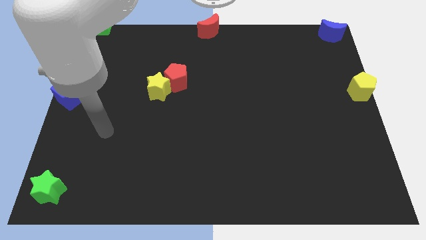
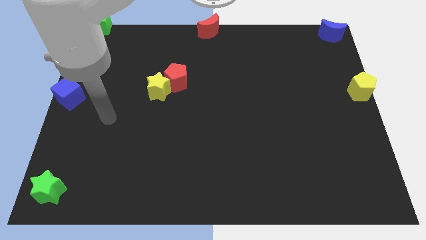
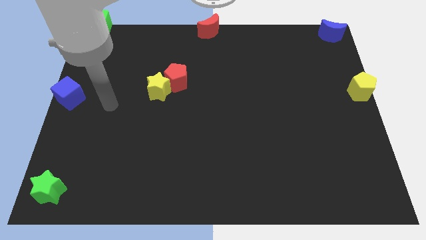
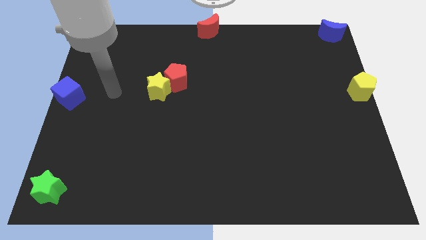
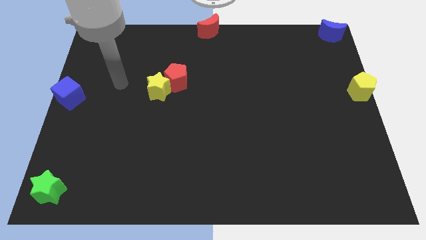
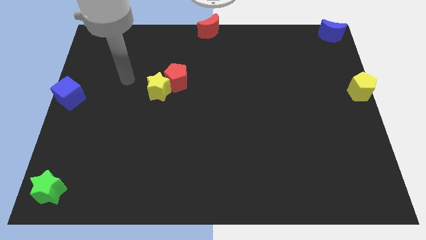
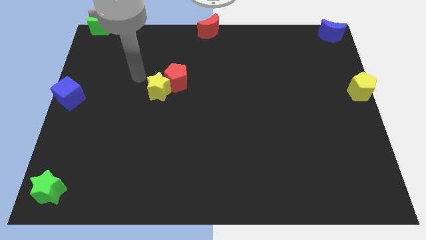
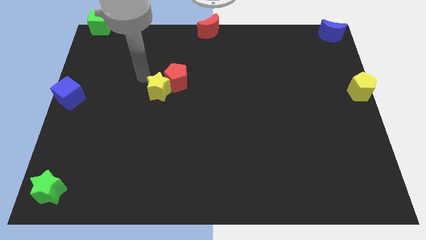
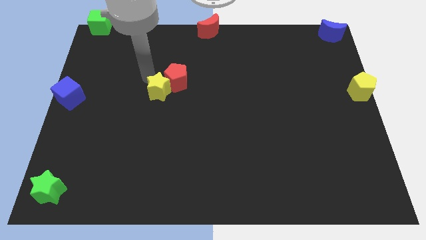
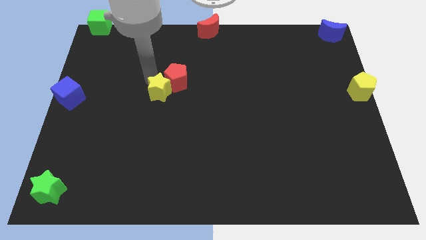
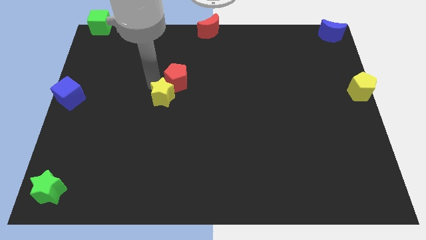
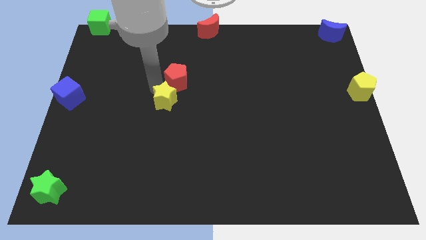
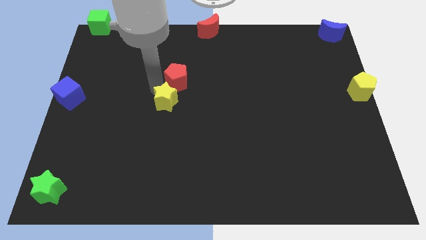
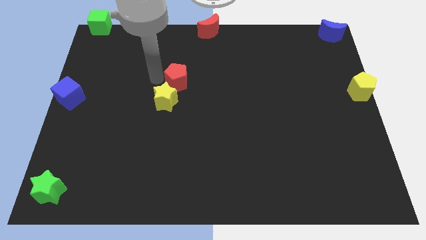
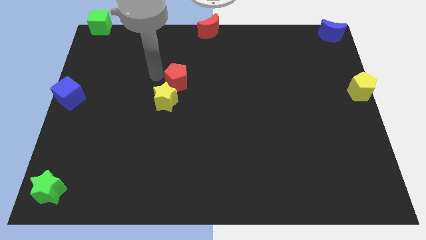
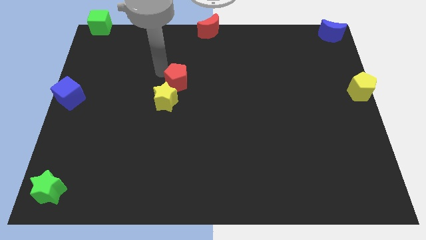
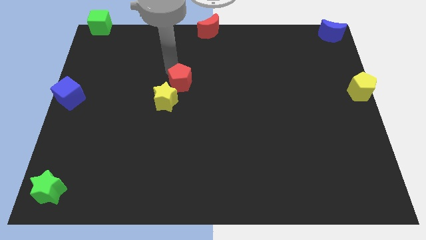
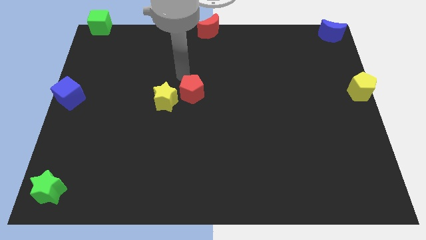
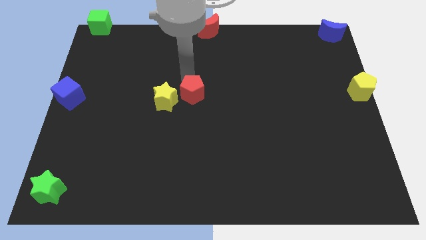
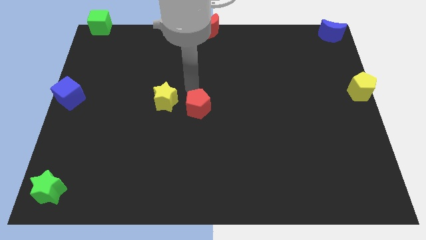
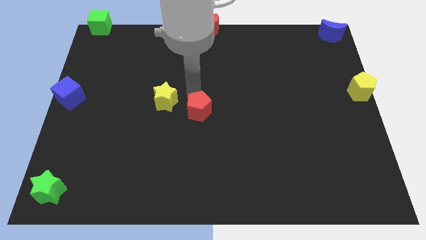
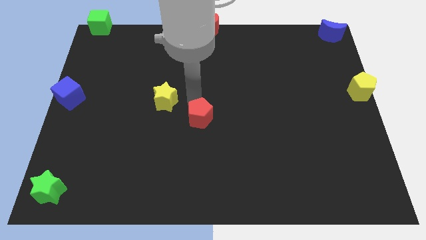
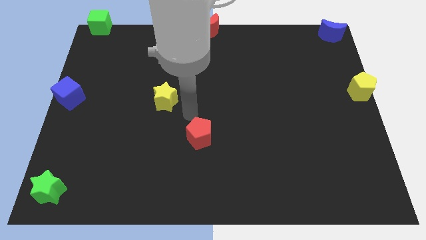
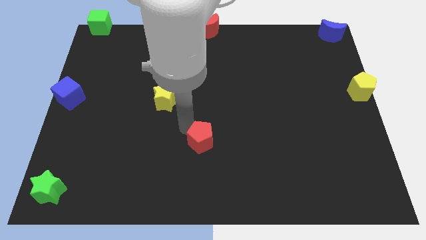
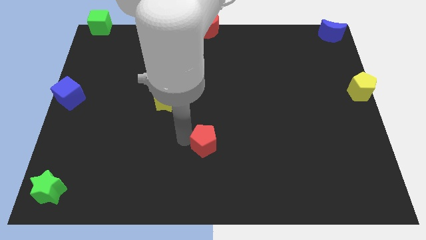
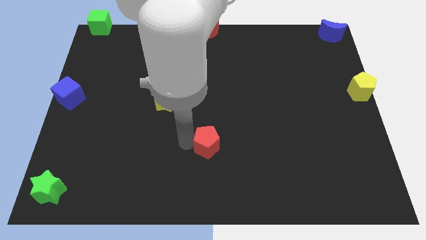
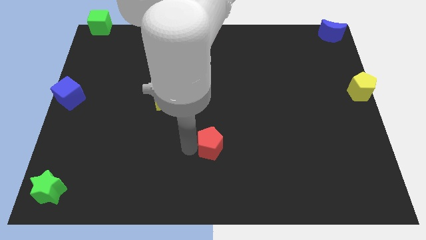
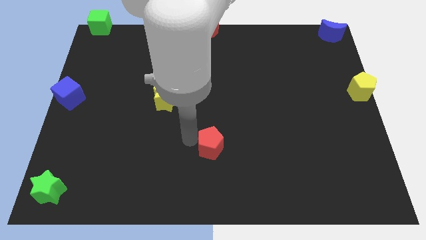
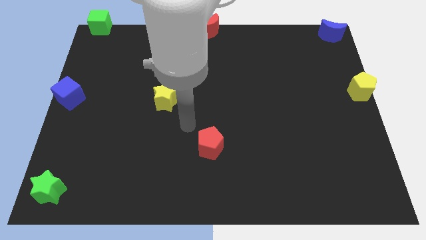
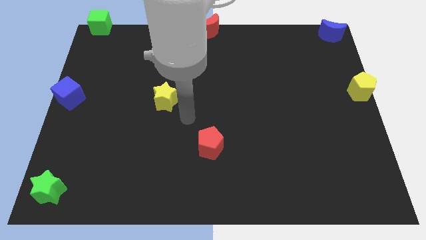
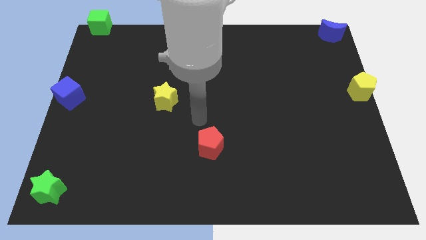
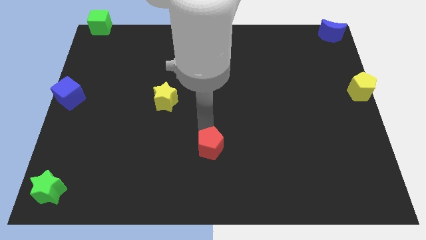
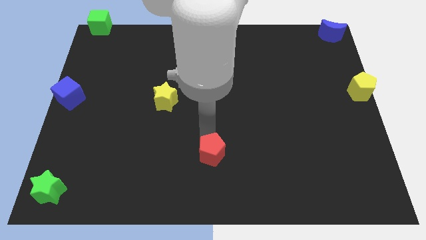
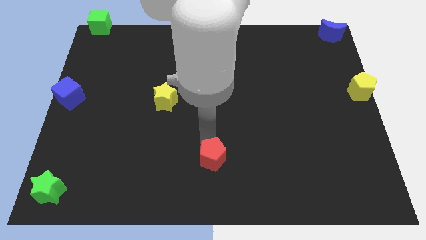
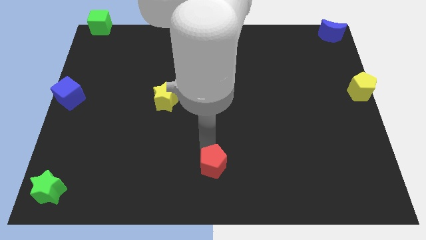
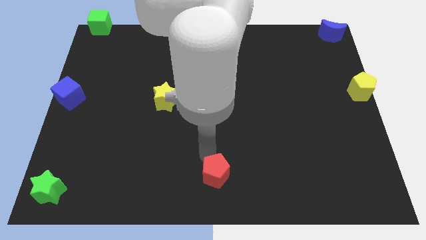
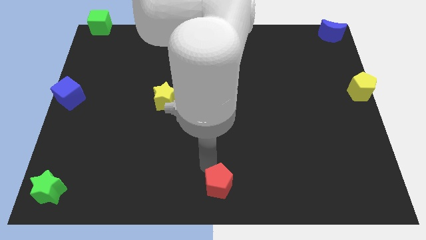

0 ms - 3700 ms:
separate the red pentagon away from the yellow star

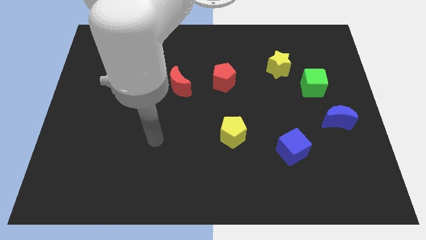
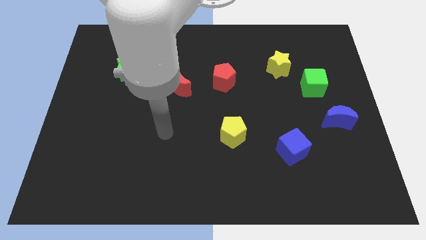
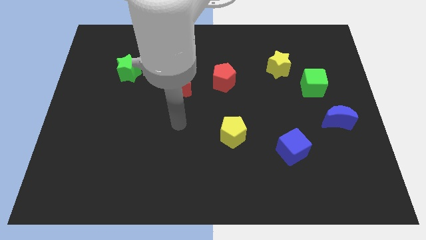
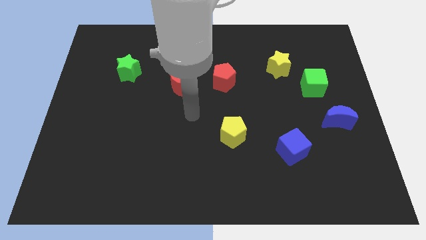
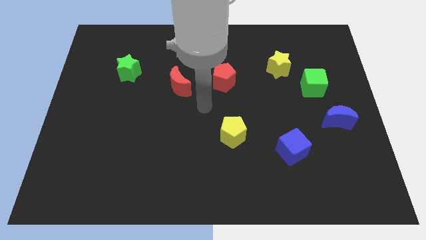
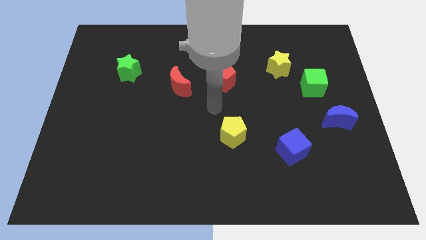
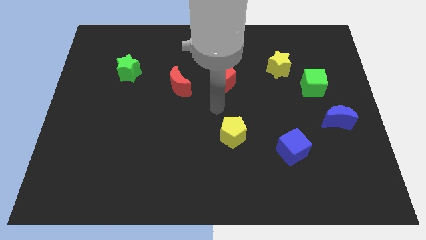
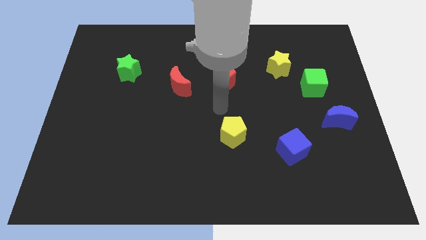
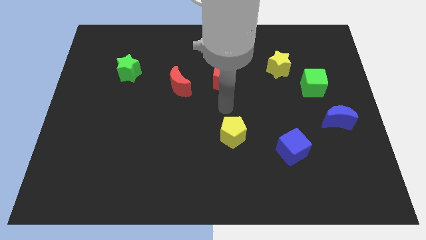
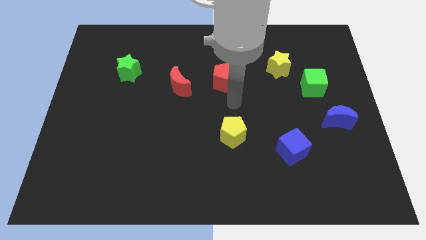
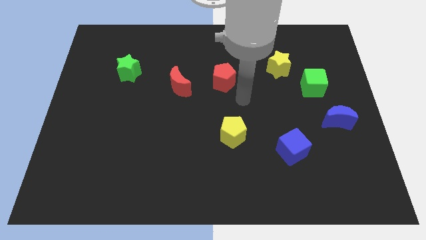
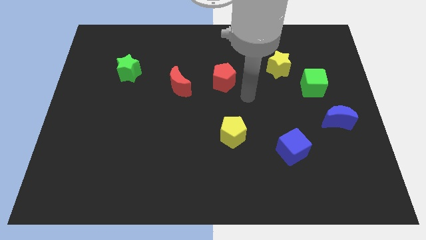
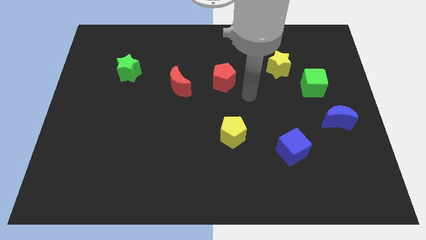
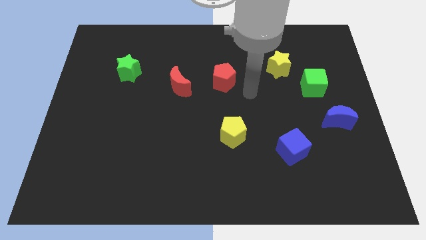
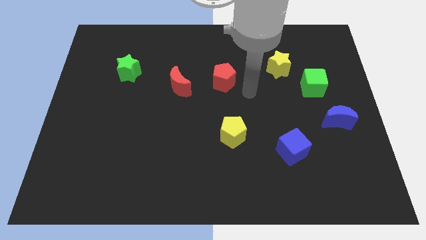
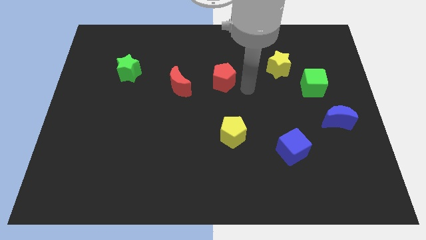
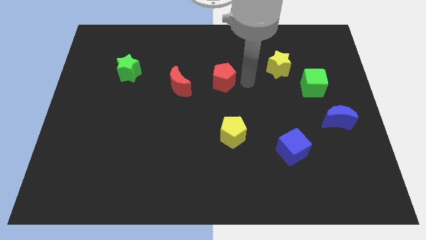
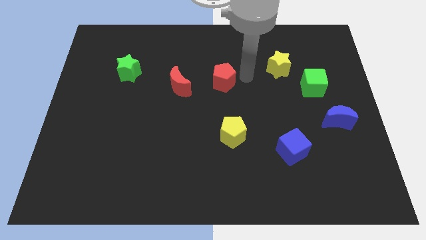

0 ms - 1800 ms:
point your hand at the right of the red pentagon

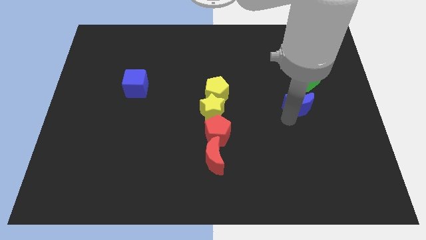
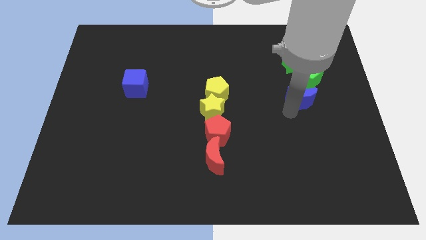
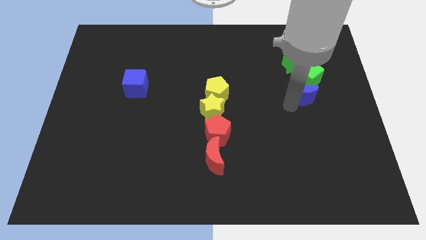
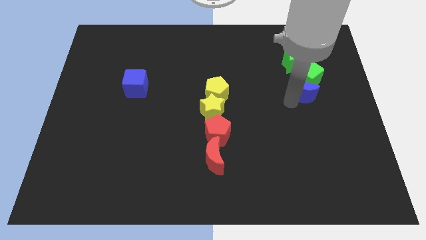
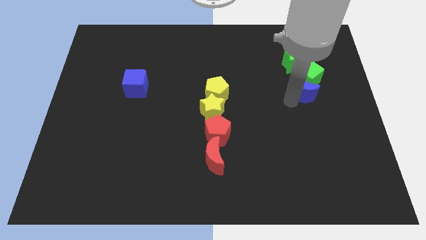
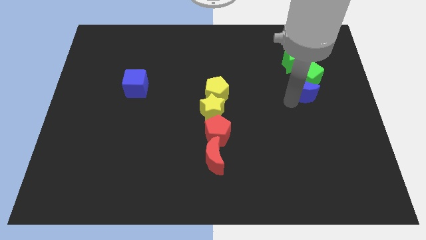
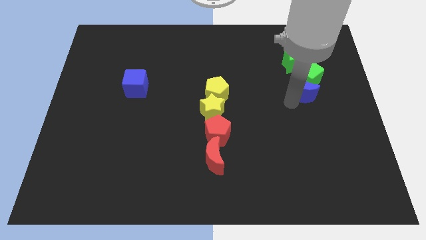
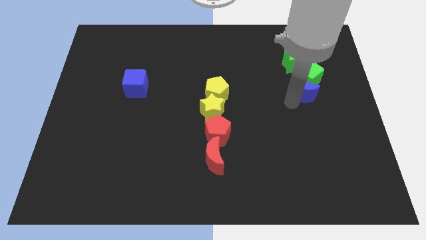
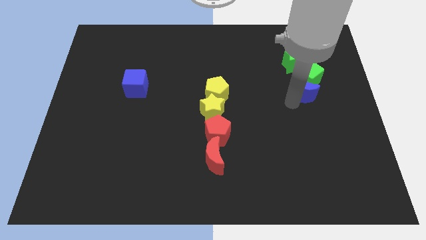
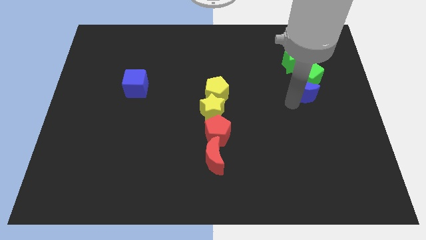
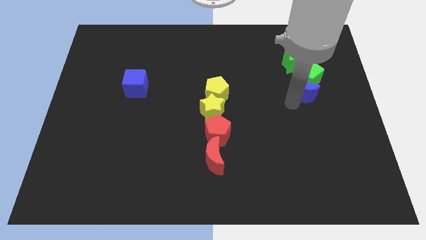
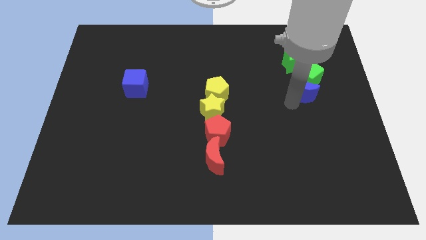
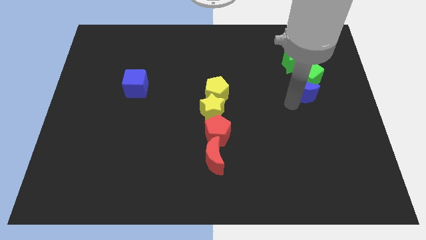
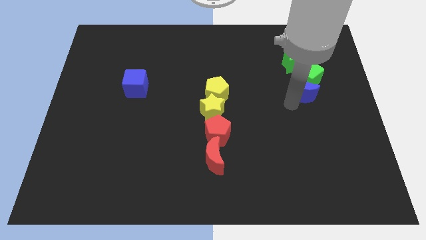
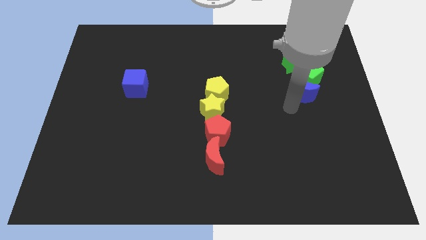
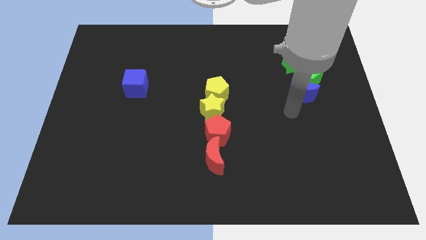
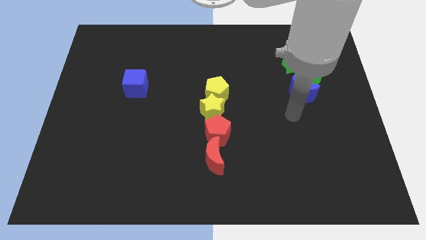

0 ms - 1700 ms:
place the blue moon at the bottom left side of the green cube

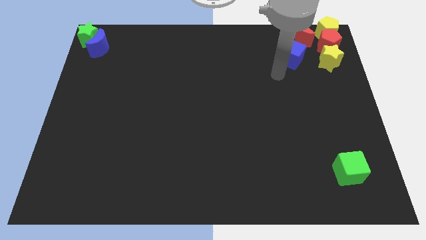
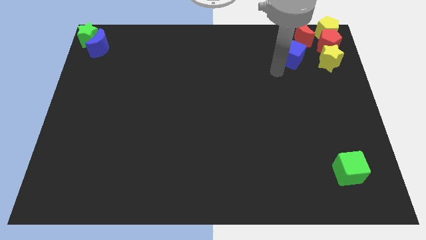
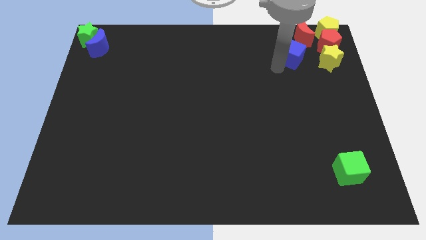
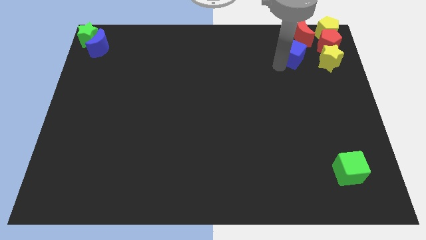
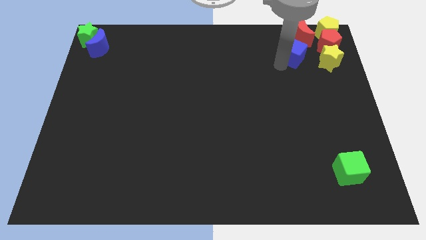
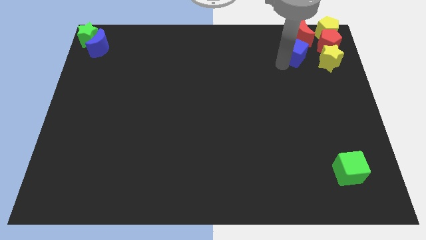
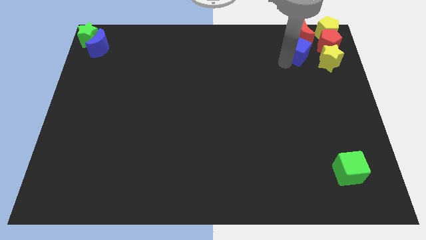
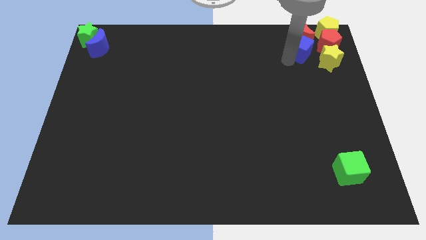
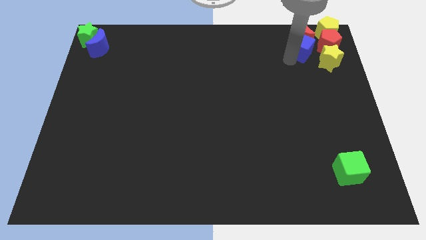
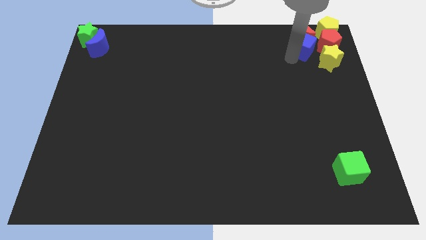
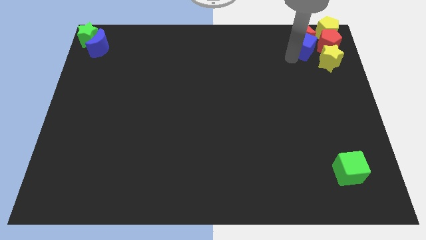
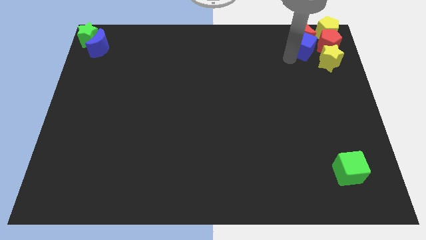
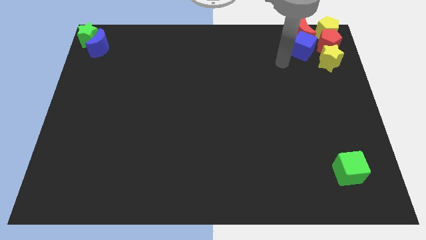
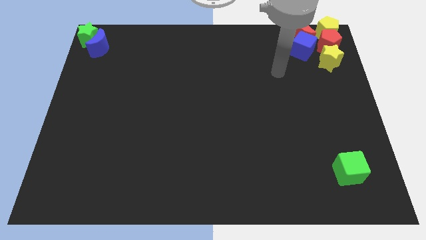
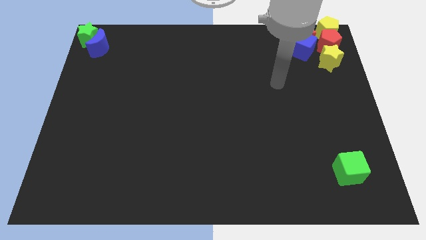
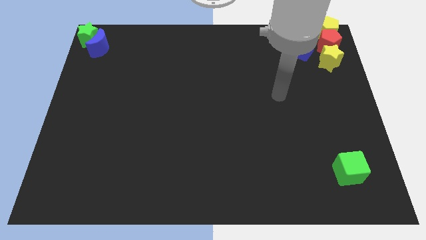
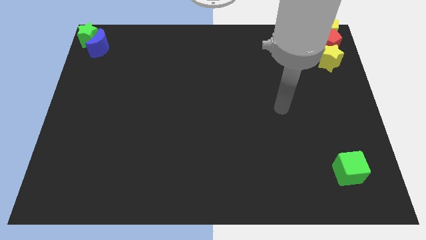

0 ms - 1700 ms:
push the blue cube to the bottom of the red crescent
